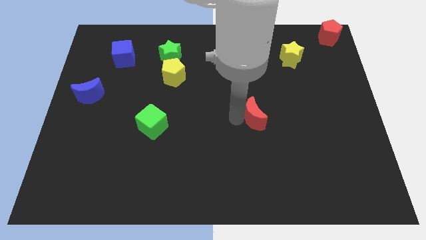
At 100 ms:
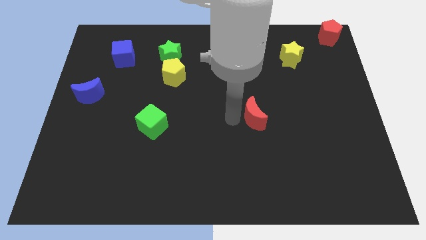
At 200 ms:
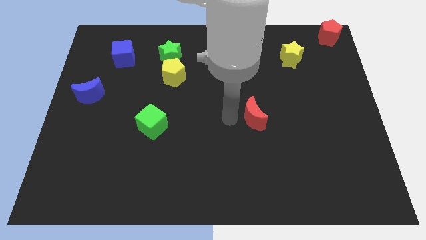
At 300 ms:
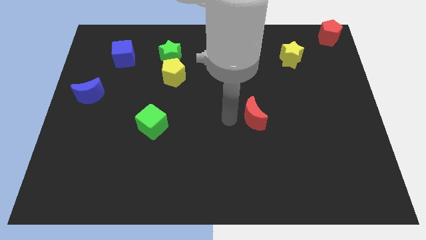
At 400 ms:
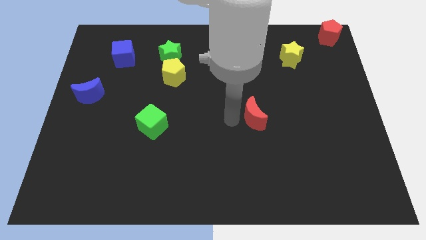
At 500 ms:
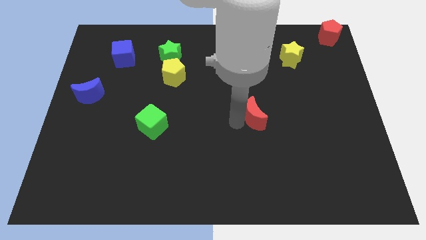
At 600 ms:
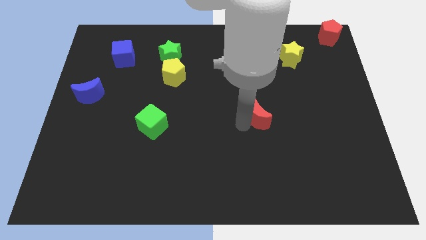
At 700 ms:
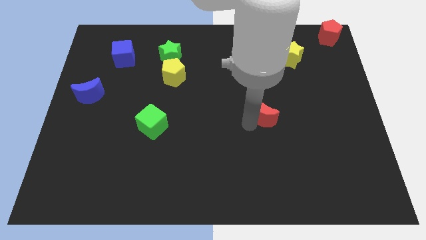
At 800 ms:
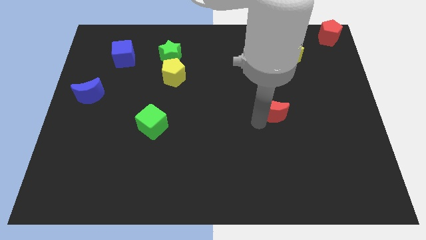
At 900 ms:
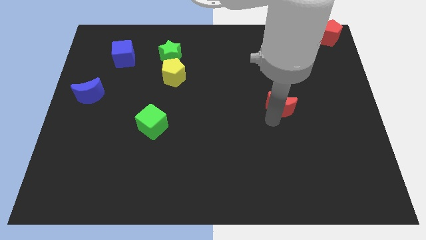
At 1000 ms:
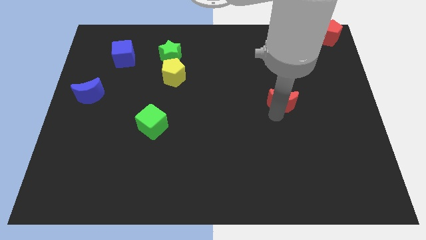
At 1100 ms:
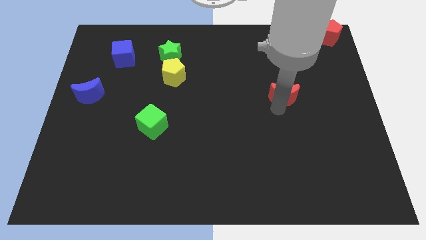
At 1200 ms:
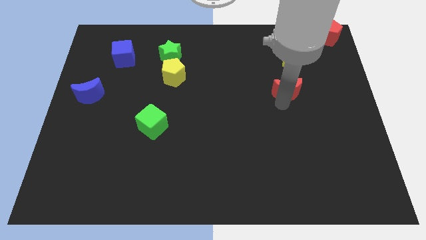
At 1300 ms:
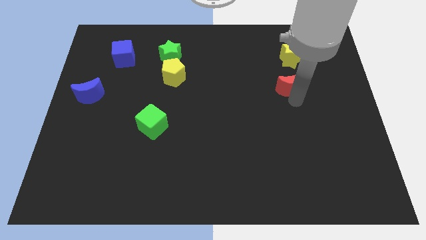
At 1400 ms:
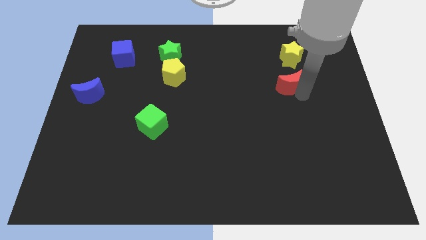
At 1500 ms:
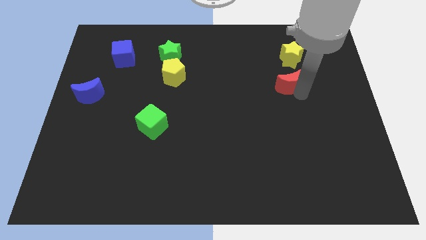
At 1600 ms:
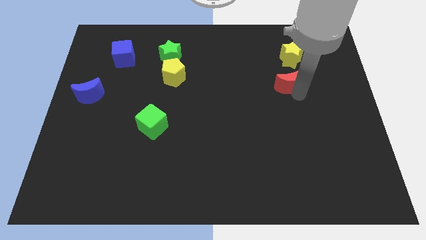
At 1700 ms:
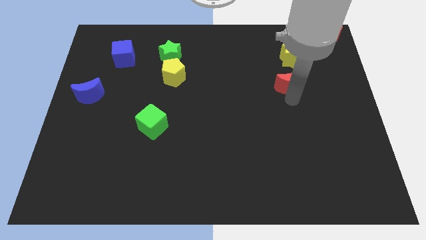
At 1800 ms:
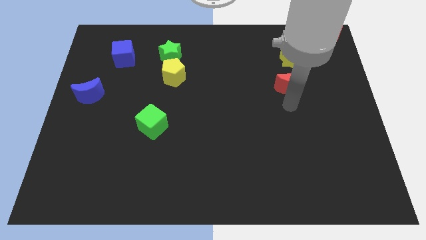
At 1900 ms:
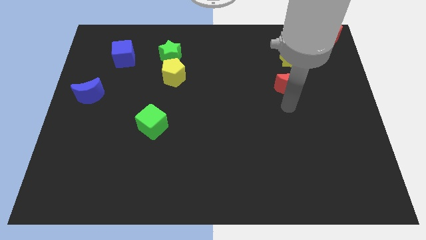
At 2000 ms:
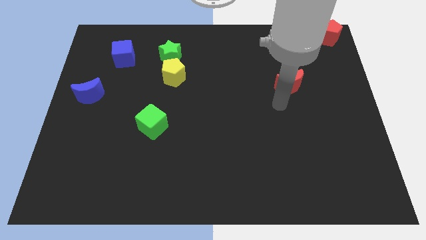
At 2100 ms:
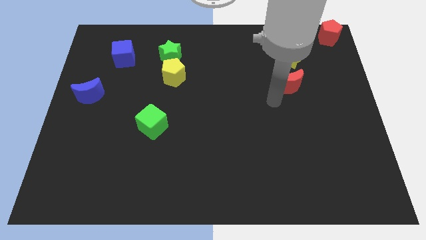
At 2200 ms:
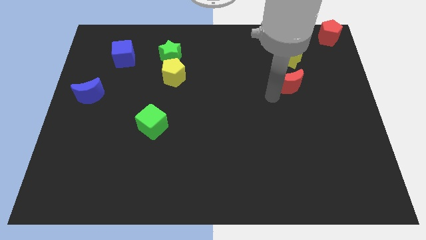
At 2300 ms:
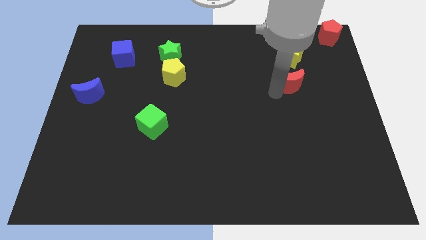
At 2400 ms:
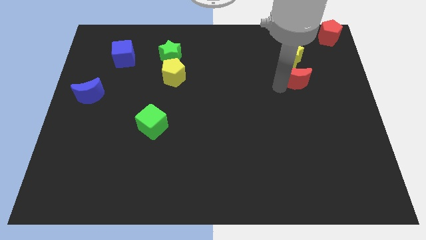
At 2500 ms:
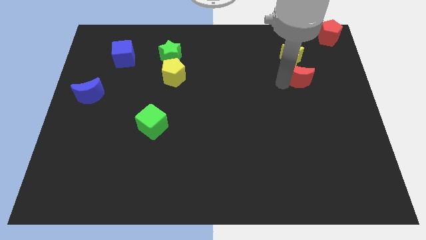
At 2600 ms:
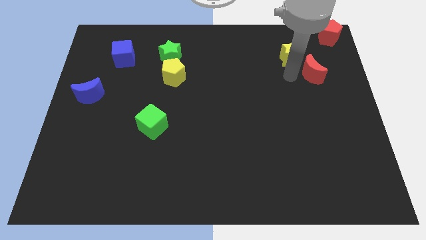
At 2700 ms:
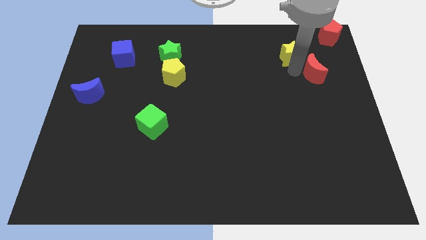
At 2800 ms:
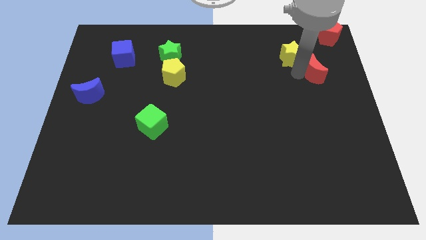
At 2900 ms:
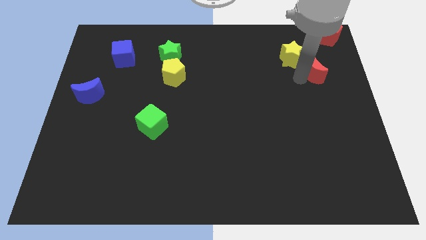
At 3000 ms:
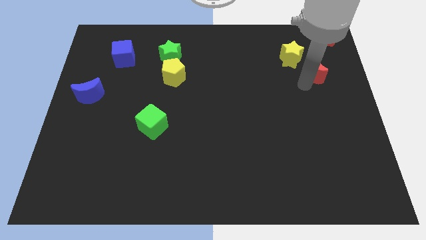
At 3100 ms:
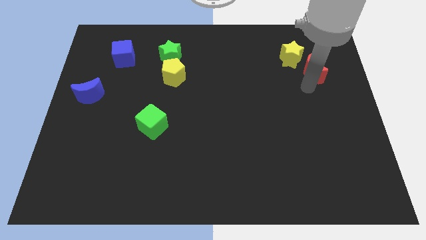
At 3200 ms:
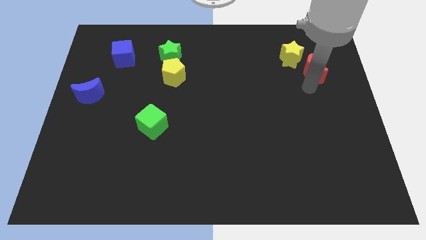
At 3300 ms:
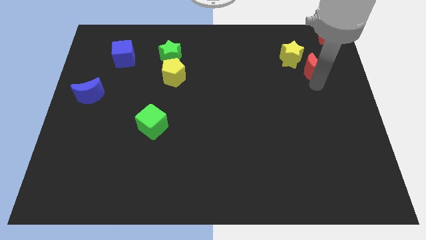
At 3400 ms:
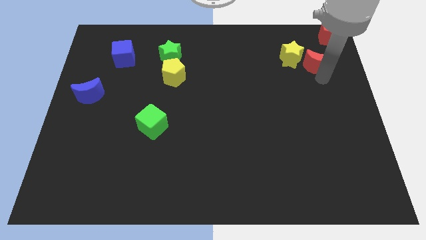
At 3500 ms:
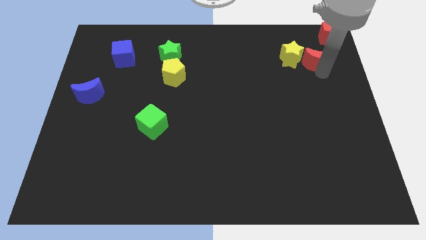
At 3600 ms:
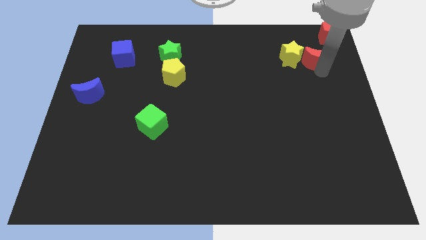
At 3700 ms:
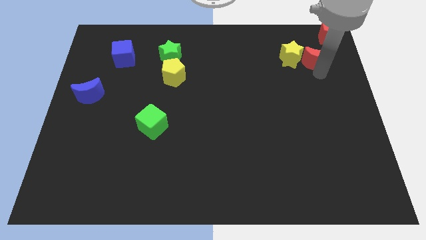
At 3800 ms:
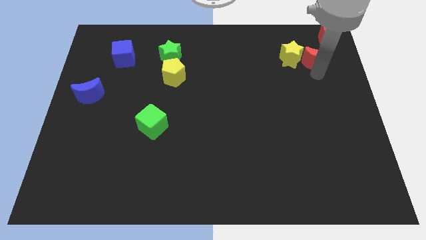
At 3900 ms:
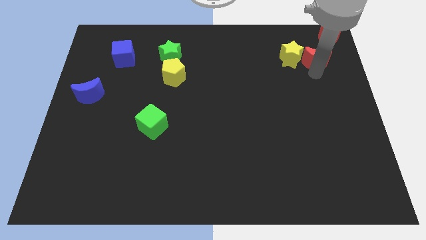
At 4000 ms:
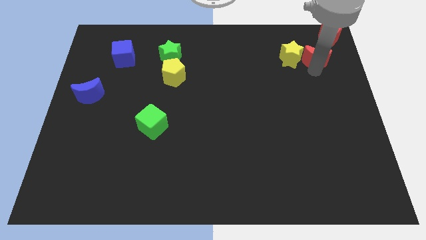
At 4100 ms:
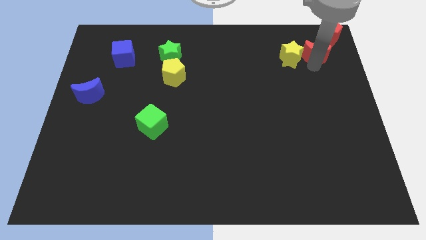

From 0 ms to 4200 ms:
put the red moon right to the yellow star

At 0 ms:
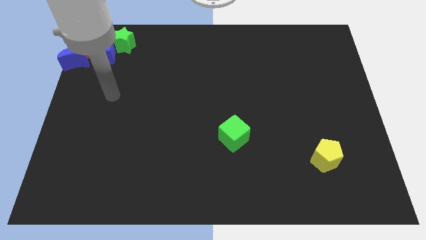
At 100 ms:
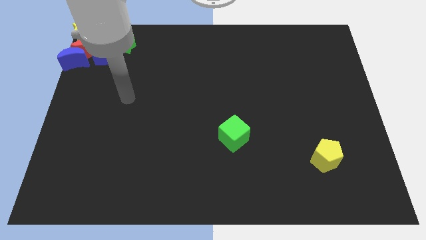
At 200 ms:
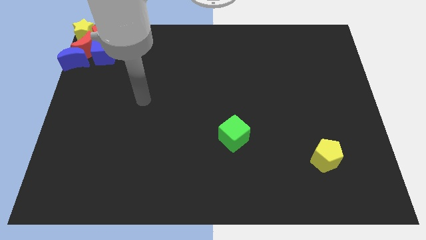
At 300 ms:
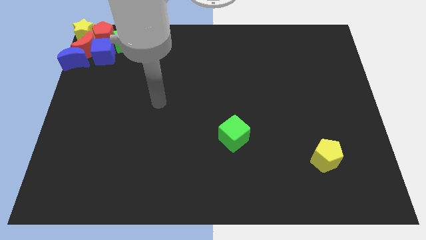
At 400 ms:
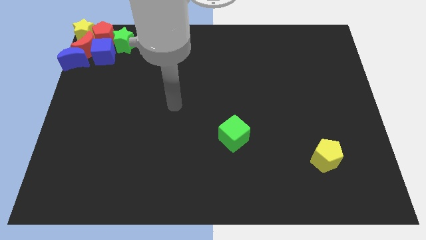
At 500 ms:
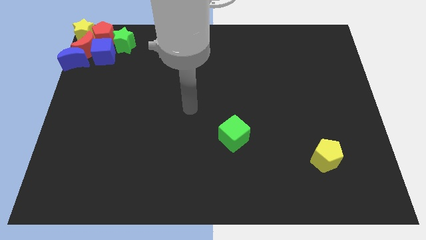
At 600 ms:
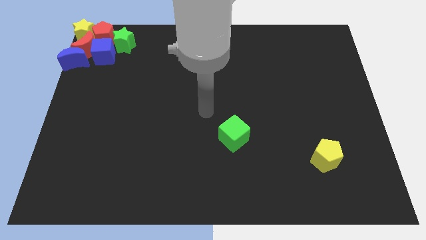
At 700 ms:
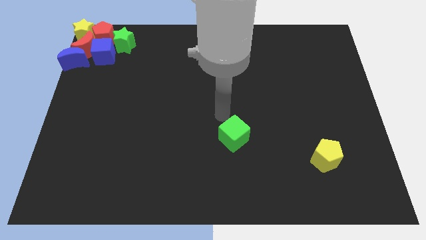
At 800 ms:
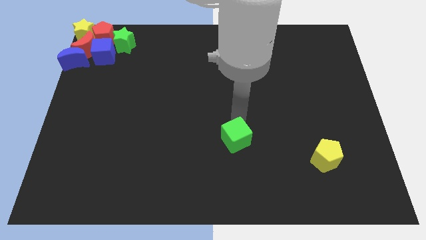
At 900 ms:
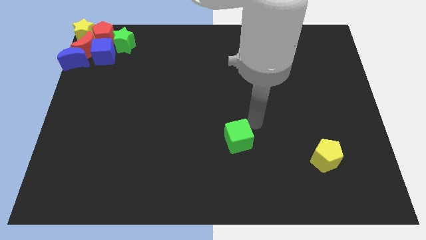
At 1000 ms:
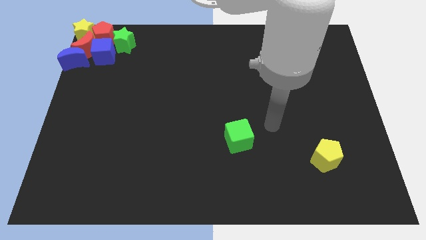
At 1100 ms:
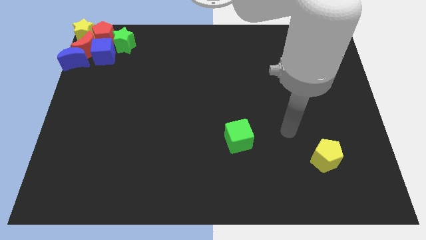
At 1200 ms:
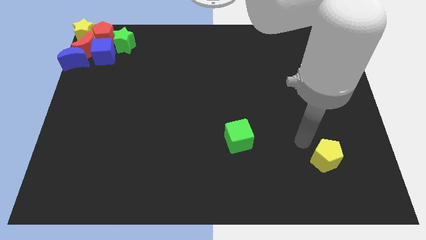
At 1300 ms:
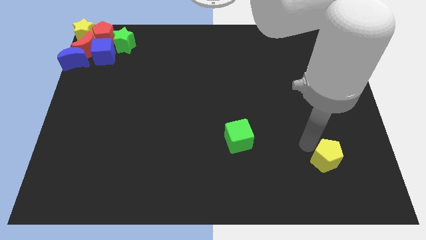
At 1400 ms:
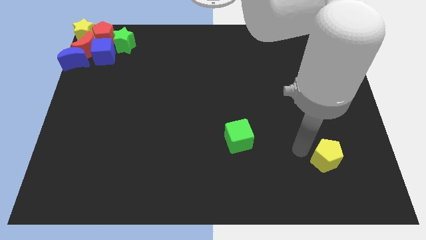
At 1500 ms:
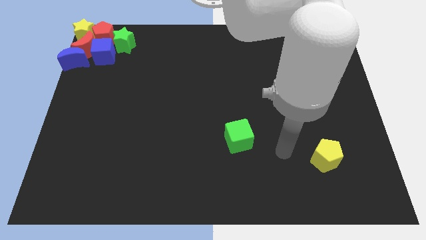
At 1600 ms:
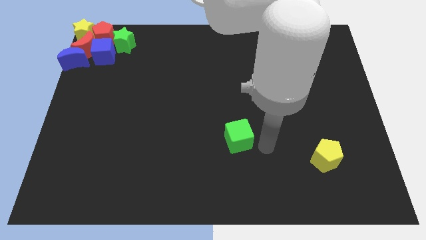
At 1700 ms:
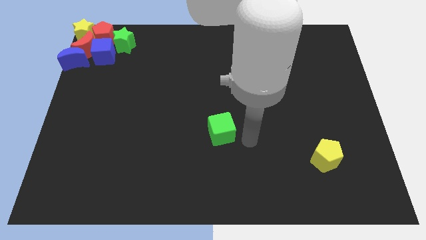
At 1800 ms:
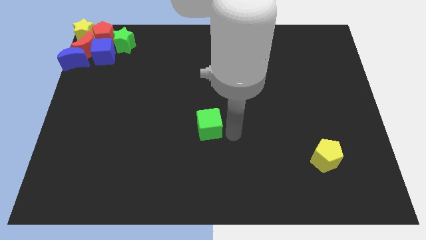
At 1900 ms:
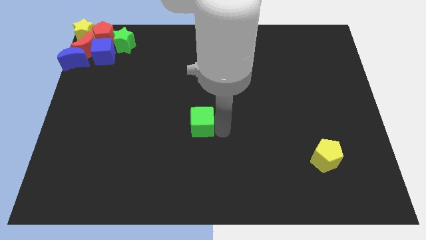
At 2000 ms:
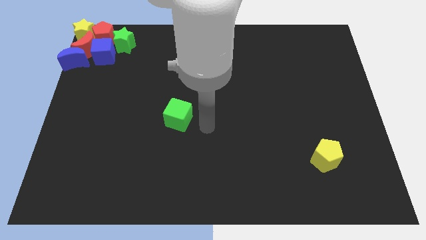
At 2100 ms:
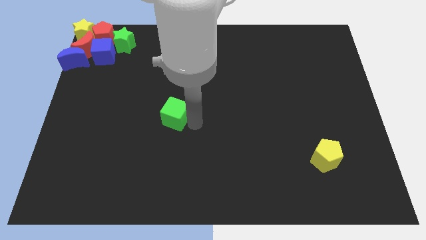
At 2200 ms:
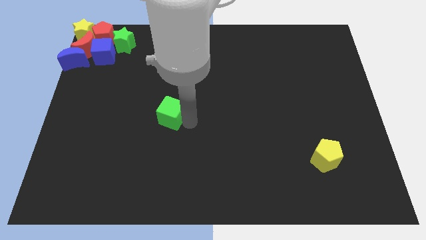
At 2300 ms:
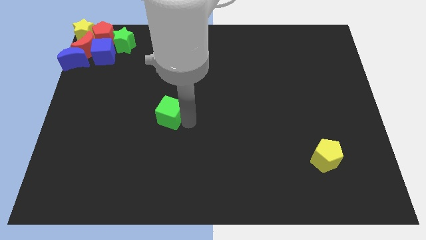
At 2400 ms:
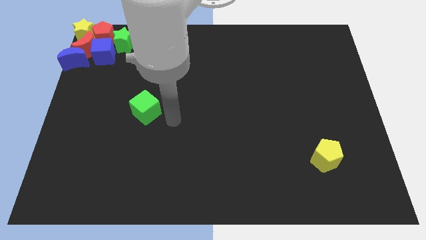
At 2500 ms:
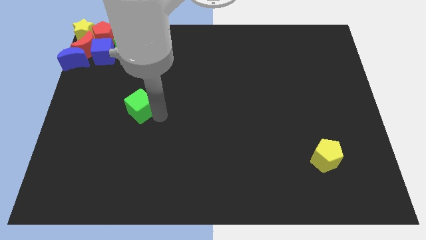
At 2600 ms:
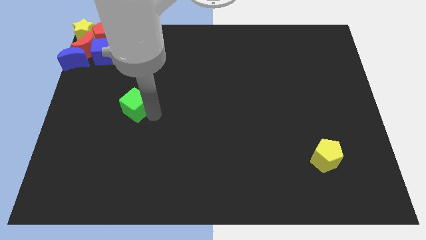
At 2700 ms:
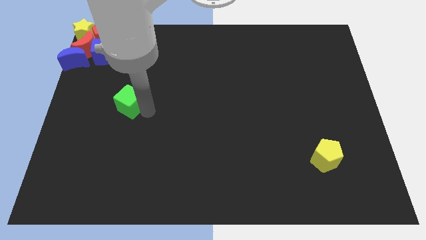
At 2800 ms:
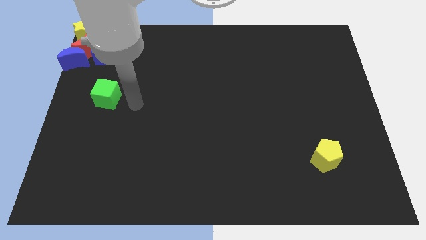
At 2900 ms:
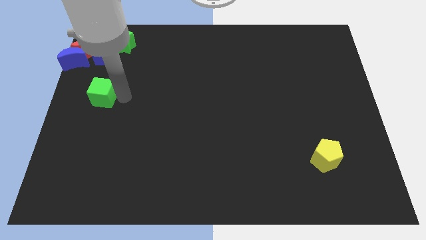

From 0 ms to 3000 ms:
place the green cube below the blue cube

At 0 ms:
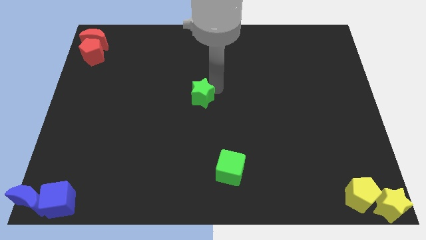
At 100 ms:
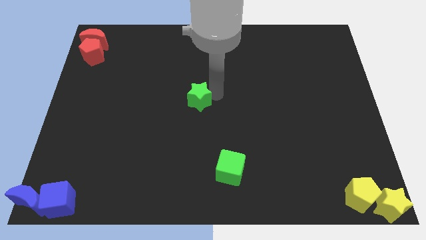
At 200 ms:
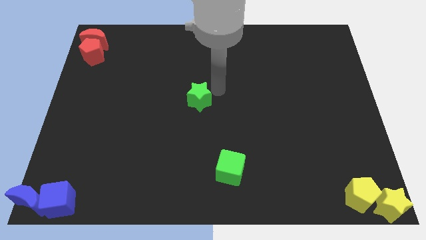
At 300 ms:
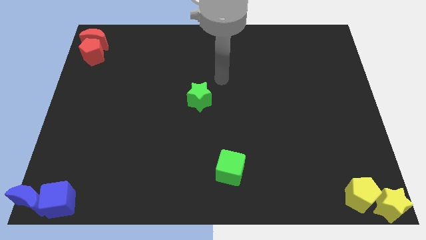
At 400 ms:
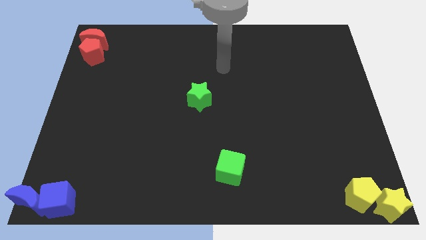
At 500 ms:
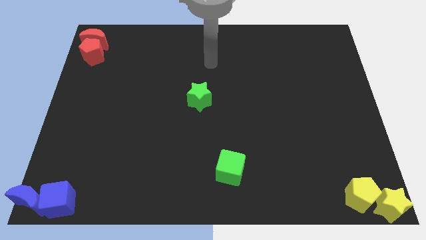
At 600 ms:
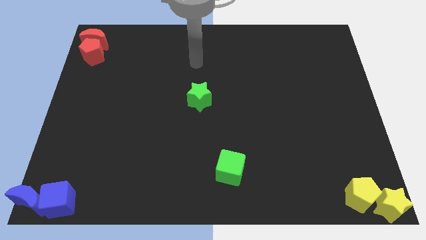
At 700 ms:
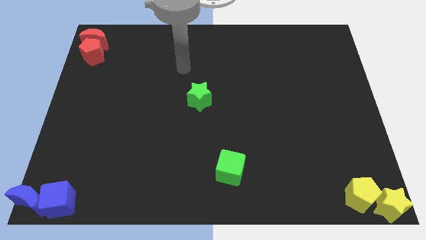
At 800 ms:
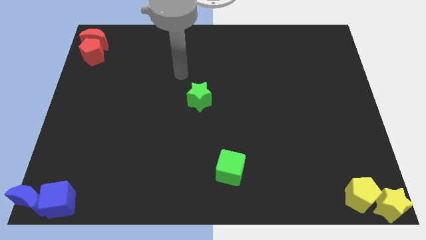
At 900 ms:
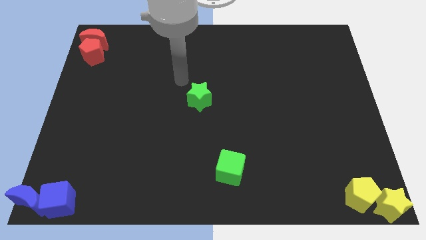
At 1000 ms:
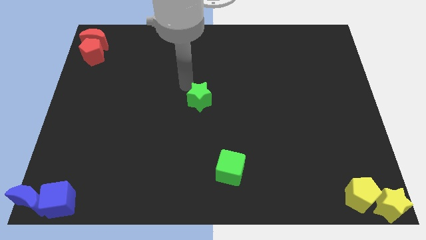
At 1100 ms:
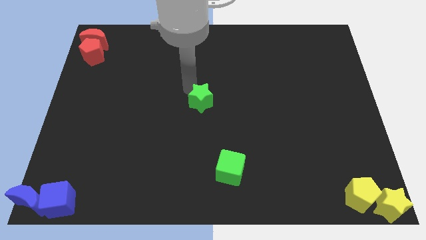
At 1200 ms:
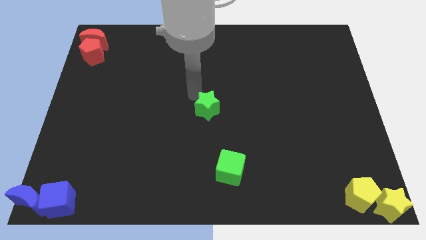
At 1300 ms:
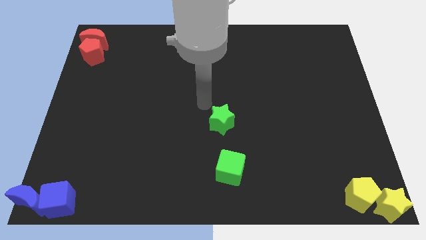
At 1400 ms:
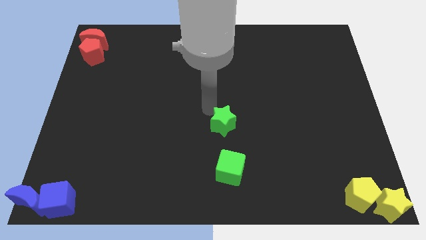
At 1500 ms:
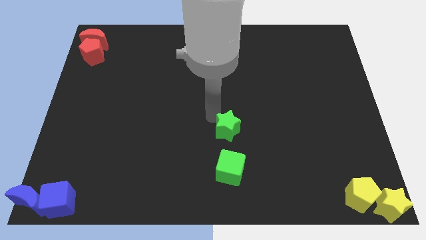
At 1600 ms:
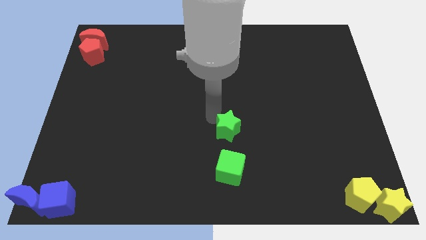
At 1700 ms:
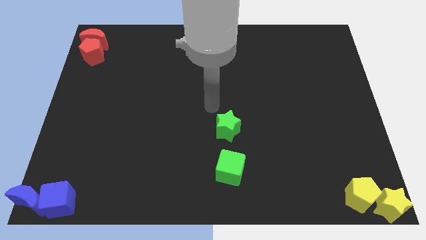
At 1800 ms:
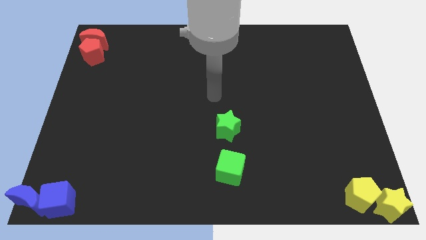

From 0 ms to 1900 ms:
place the green star vertically above the green cube
